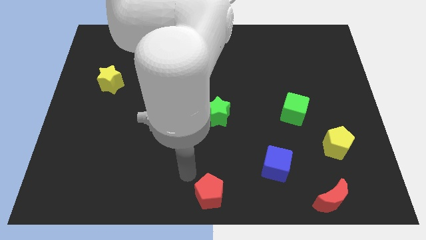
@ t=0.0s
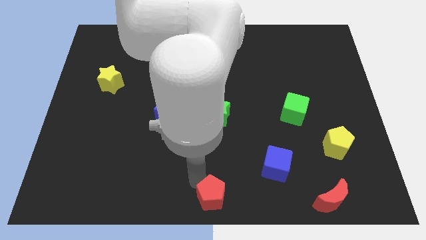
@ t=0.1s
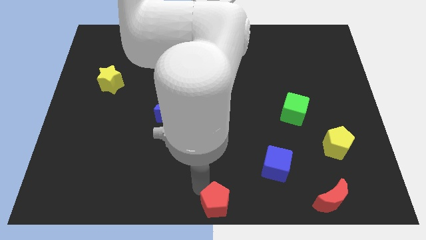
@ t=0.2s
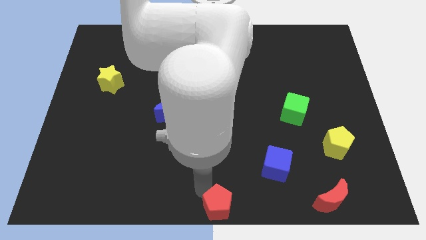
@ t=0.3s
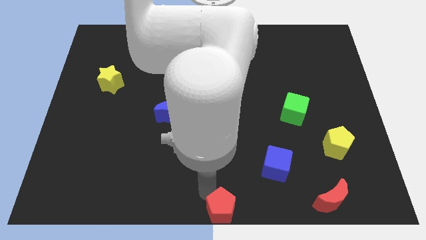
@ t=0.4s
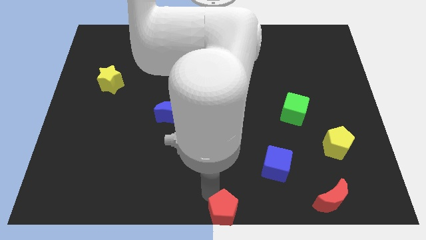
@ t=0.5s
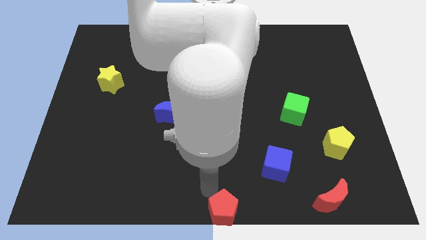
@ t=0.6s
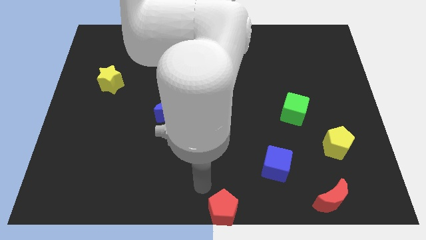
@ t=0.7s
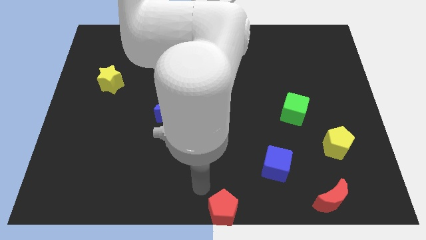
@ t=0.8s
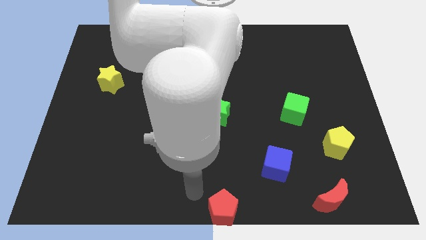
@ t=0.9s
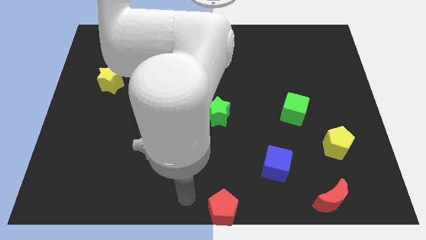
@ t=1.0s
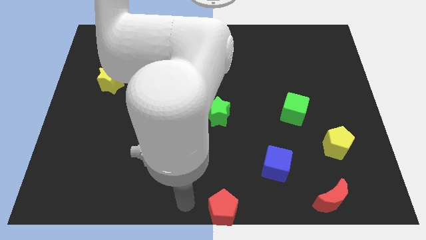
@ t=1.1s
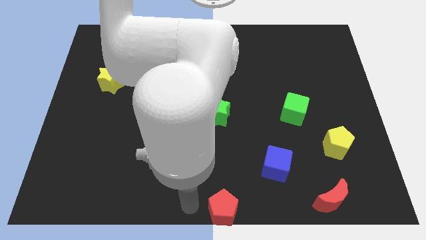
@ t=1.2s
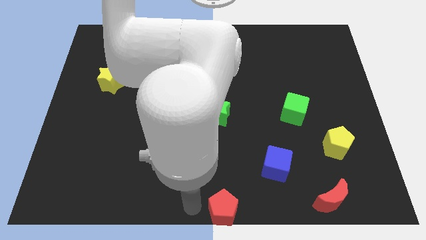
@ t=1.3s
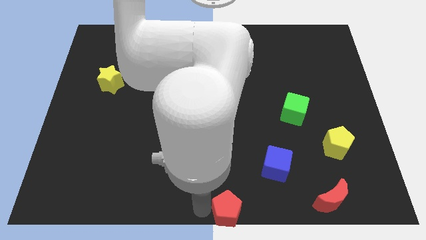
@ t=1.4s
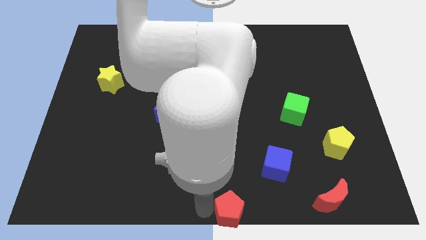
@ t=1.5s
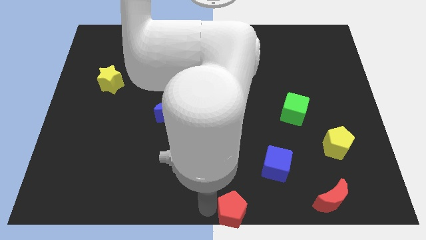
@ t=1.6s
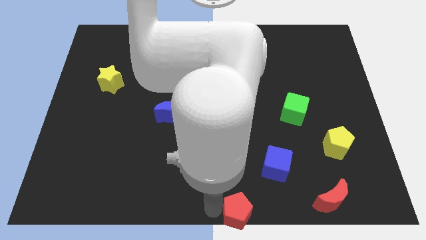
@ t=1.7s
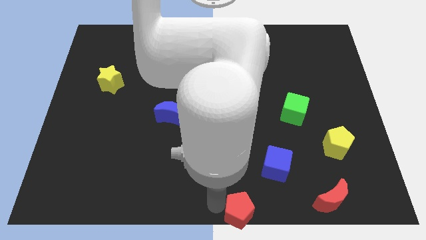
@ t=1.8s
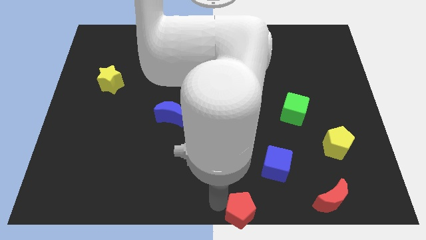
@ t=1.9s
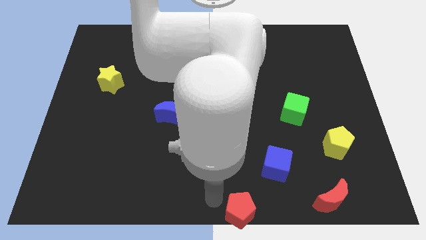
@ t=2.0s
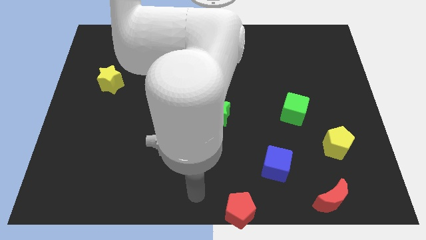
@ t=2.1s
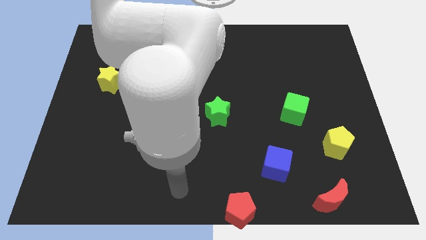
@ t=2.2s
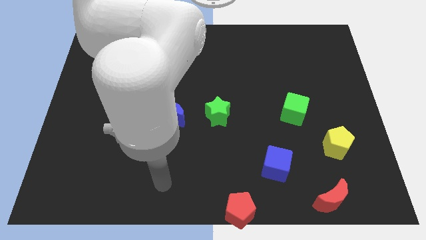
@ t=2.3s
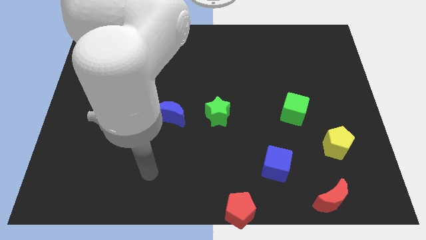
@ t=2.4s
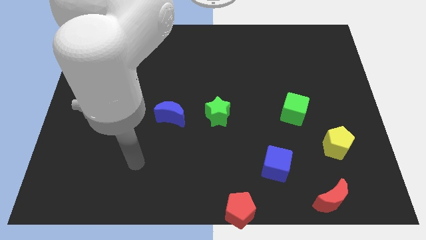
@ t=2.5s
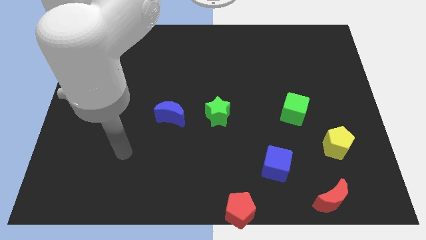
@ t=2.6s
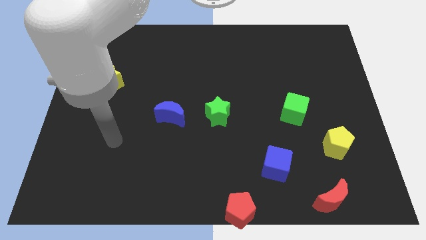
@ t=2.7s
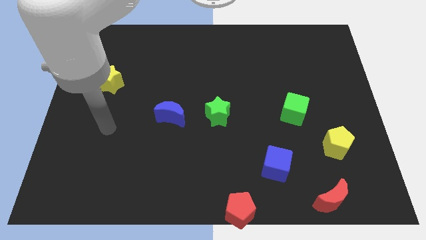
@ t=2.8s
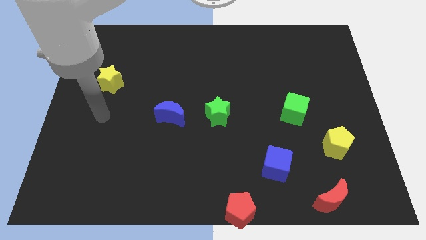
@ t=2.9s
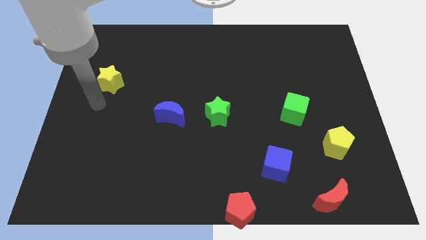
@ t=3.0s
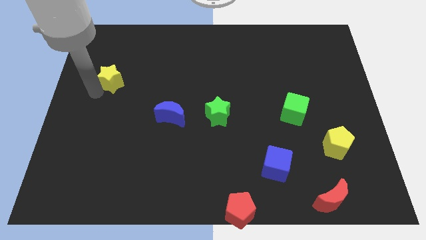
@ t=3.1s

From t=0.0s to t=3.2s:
move red pentagon diagonally left bottom of the blue cube

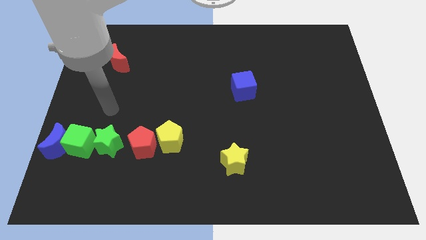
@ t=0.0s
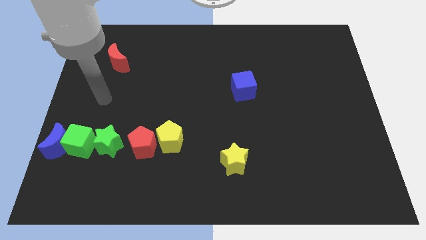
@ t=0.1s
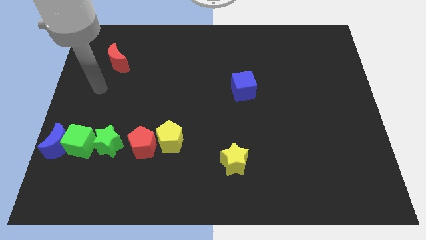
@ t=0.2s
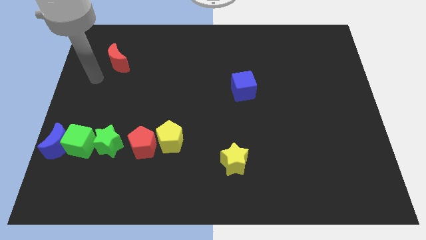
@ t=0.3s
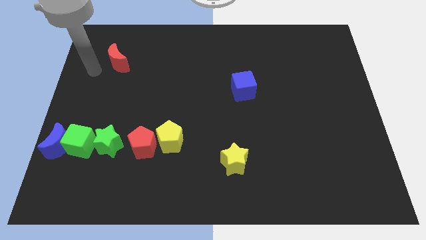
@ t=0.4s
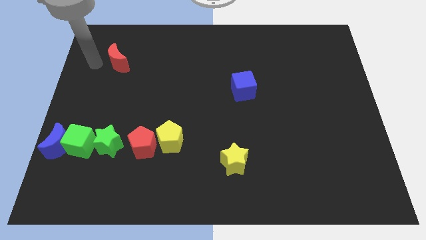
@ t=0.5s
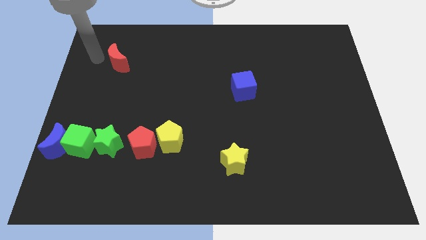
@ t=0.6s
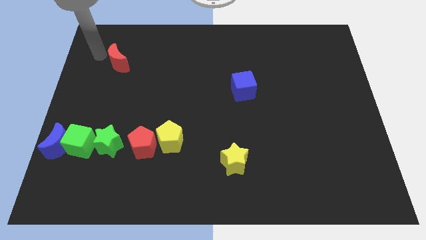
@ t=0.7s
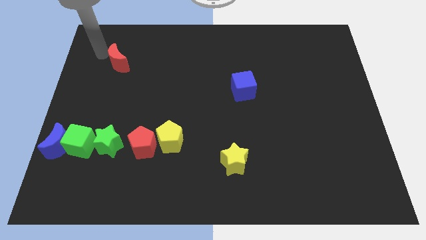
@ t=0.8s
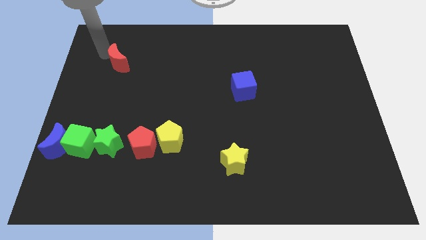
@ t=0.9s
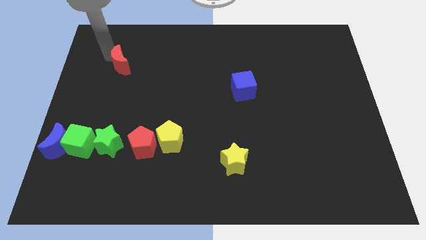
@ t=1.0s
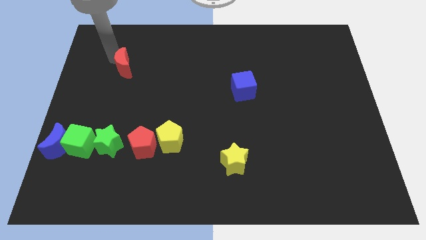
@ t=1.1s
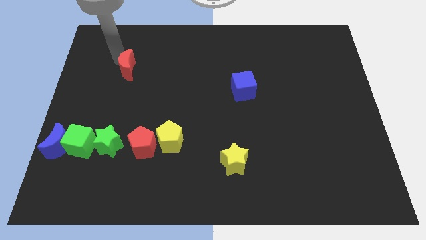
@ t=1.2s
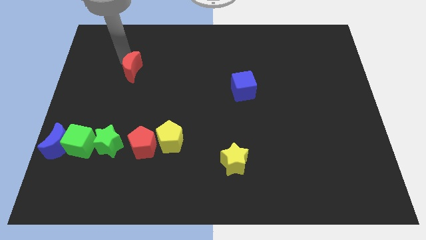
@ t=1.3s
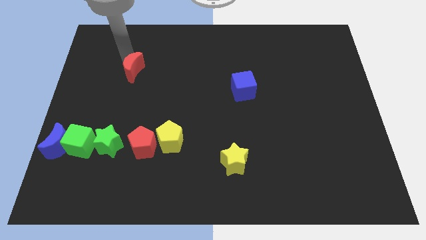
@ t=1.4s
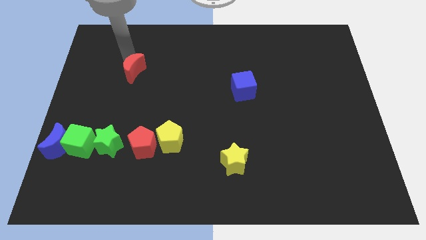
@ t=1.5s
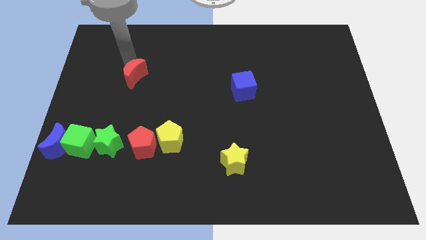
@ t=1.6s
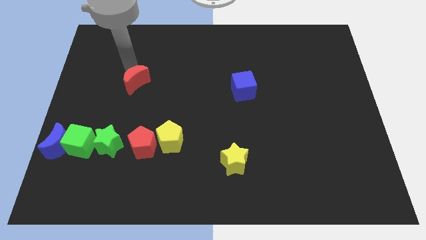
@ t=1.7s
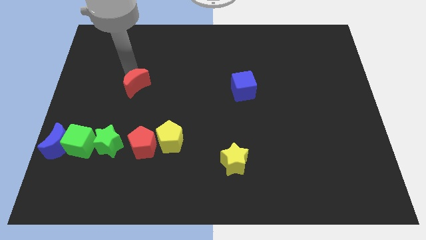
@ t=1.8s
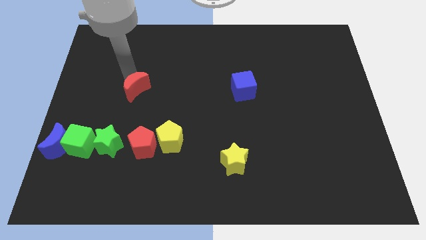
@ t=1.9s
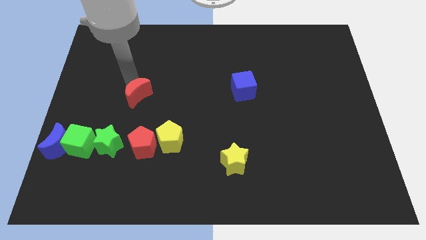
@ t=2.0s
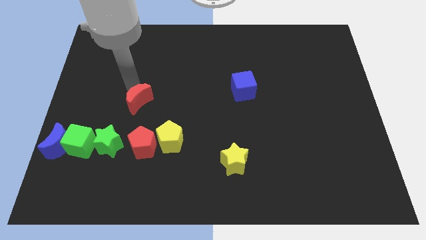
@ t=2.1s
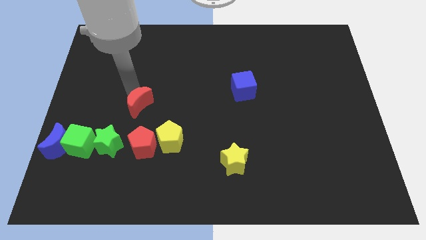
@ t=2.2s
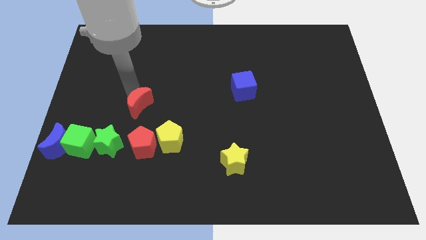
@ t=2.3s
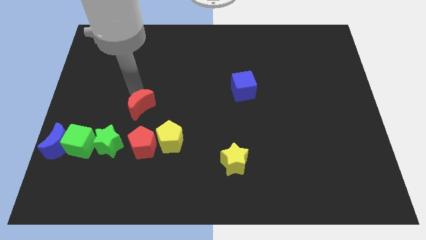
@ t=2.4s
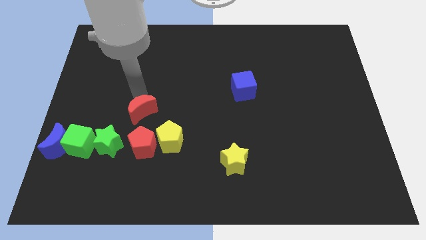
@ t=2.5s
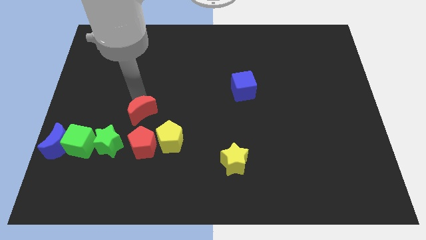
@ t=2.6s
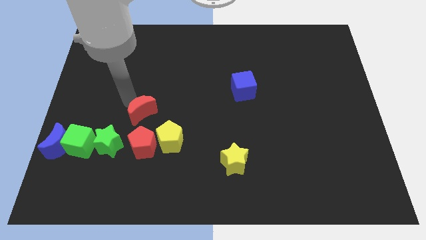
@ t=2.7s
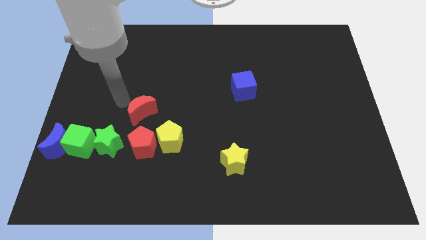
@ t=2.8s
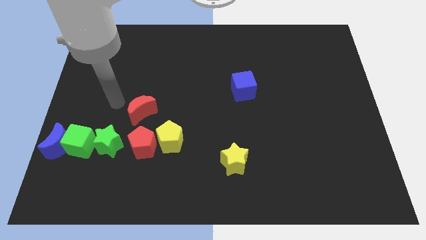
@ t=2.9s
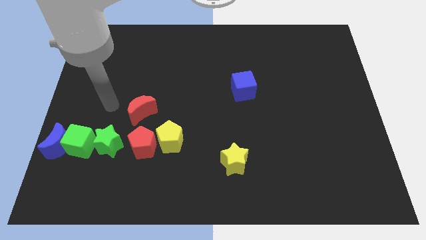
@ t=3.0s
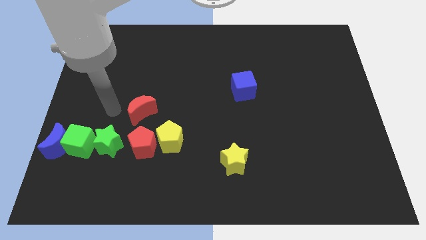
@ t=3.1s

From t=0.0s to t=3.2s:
move the red crescent towards the top of red pentagon

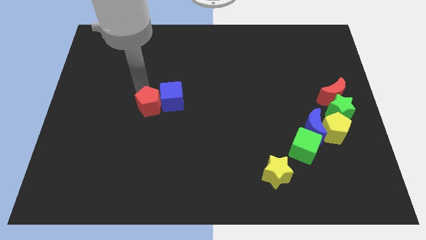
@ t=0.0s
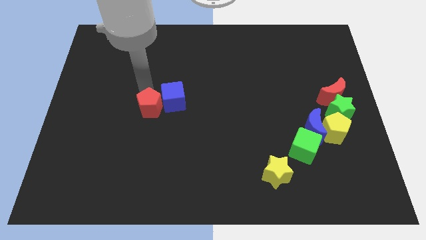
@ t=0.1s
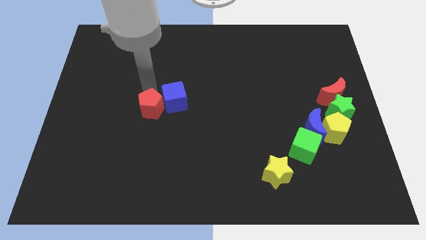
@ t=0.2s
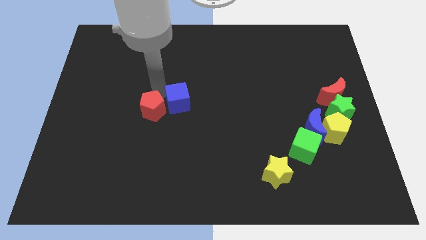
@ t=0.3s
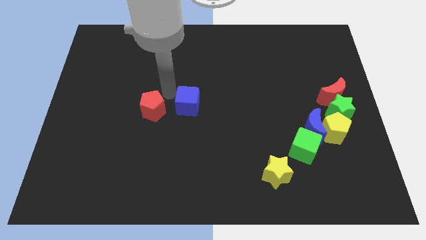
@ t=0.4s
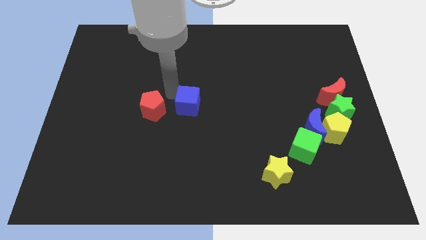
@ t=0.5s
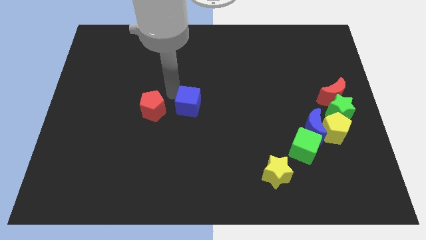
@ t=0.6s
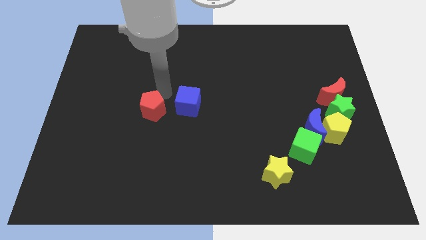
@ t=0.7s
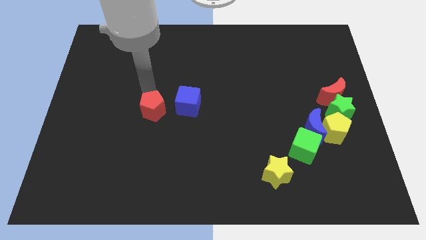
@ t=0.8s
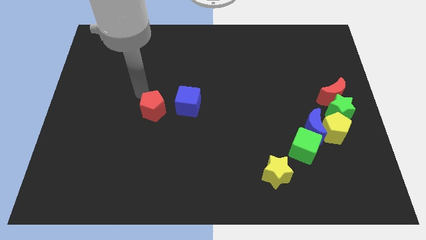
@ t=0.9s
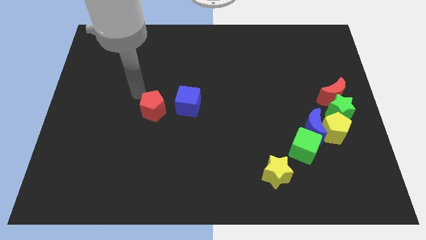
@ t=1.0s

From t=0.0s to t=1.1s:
separate red pentagon and blue cube

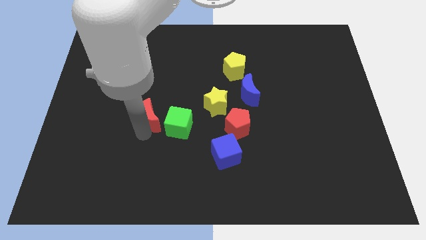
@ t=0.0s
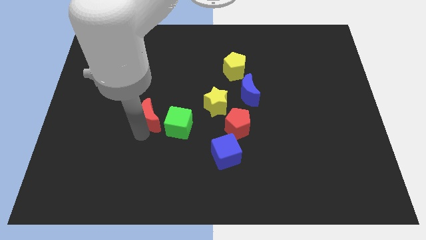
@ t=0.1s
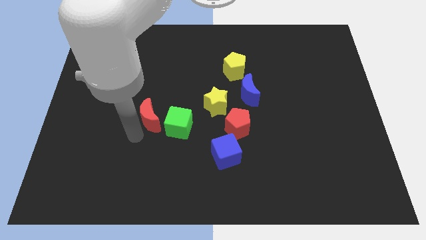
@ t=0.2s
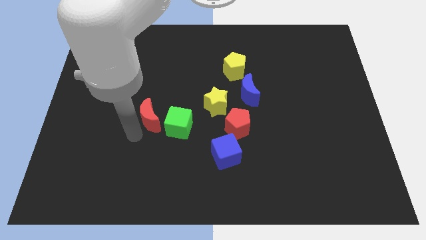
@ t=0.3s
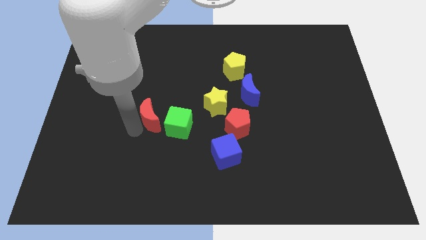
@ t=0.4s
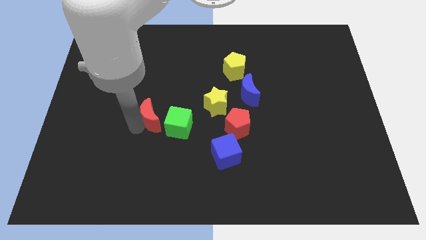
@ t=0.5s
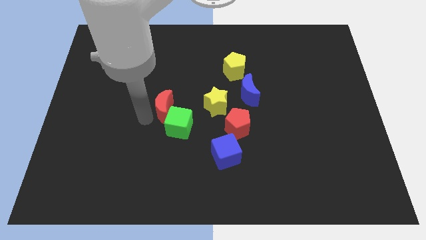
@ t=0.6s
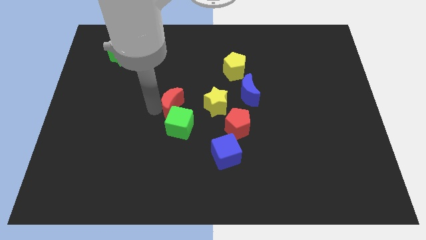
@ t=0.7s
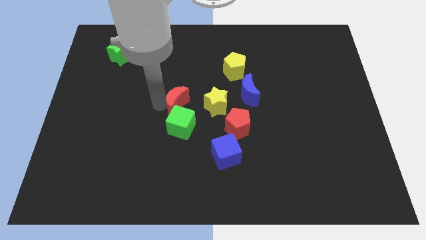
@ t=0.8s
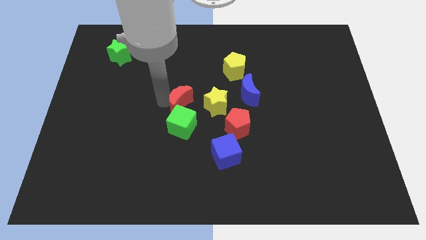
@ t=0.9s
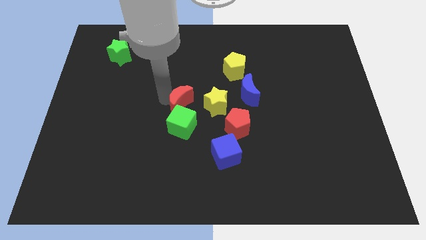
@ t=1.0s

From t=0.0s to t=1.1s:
move the red crescent and the green cube together

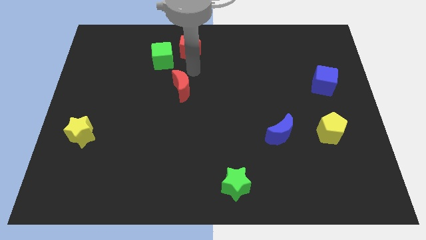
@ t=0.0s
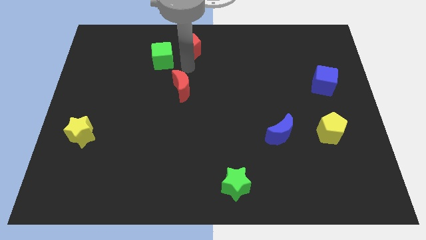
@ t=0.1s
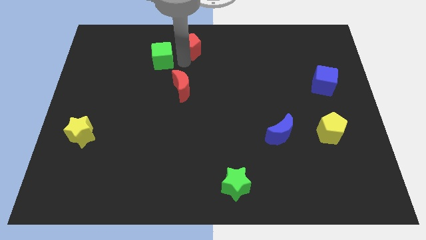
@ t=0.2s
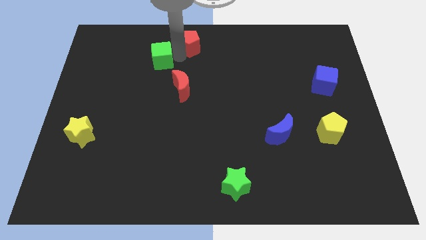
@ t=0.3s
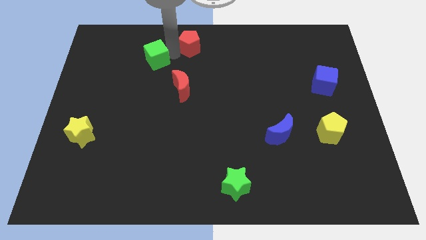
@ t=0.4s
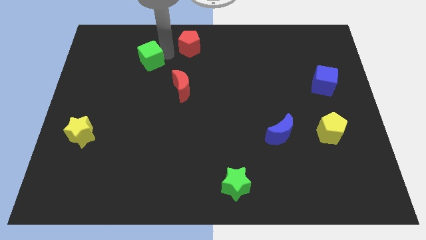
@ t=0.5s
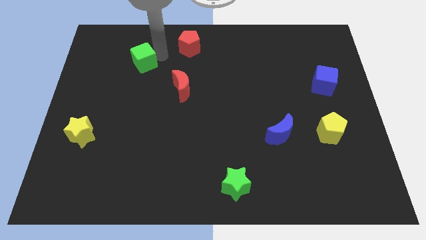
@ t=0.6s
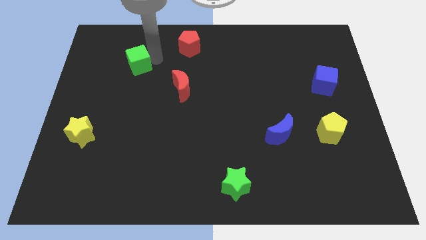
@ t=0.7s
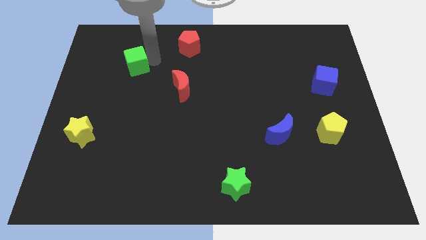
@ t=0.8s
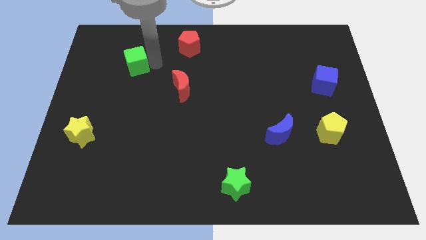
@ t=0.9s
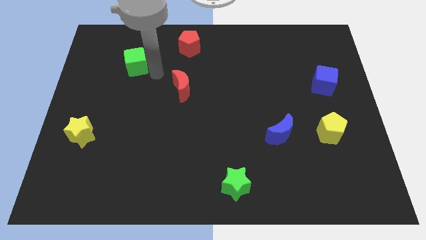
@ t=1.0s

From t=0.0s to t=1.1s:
slide the green cube away from the red pentagon
